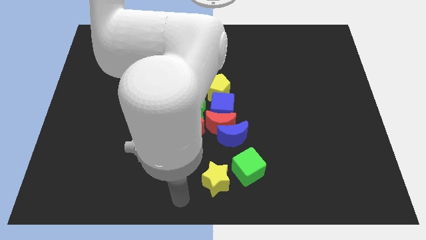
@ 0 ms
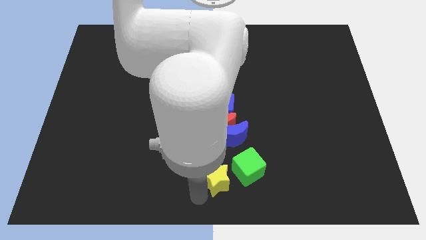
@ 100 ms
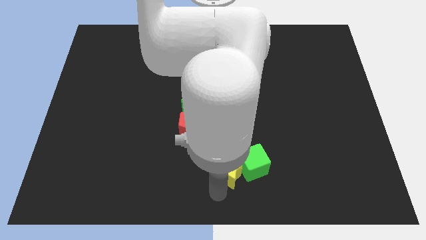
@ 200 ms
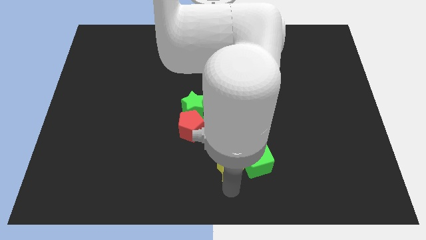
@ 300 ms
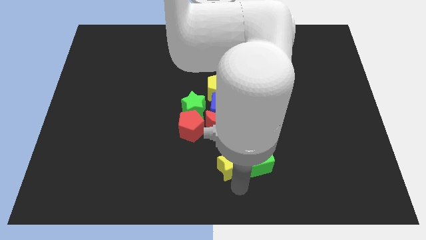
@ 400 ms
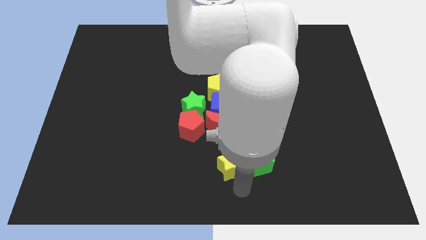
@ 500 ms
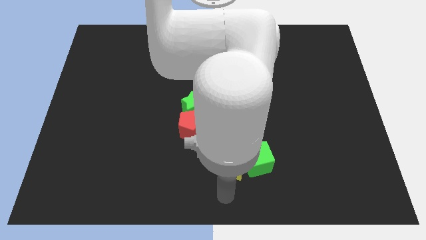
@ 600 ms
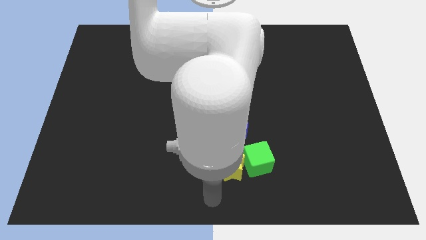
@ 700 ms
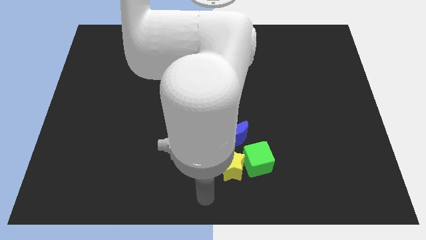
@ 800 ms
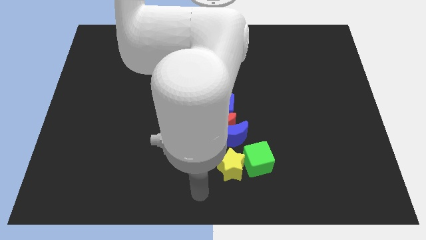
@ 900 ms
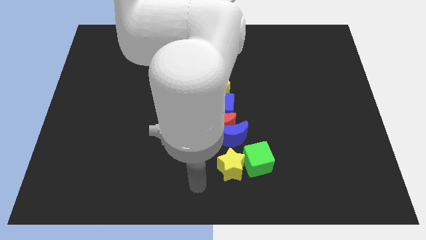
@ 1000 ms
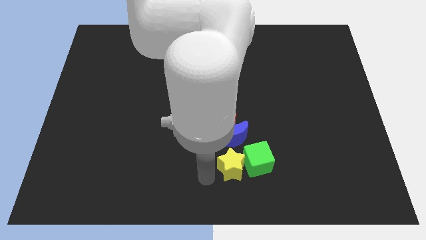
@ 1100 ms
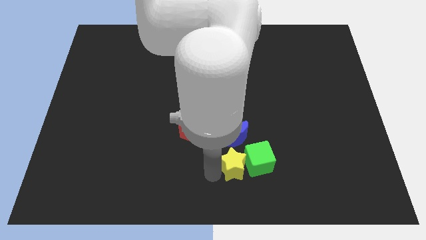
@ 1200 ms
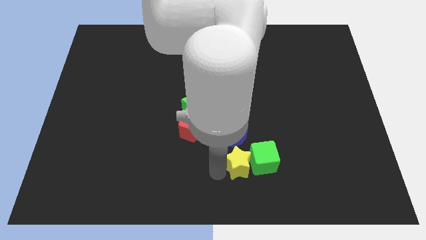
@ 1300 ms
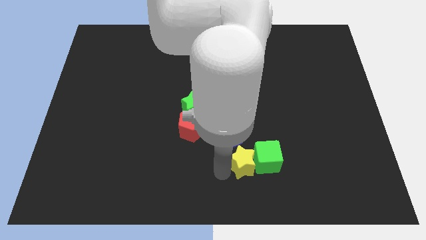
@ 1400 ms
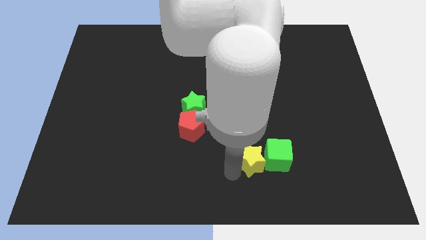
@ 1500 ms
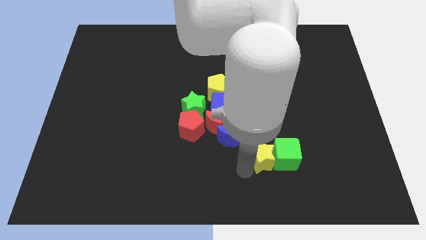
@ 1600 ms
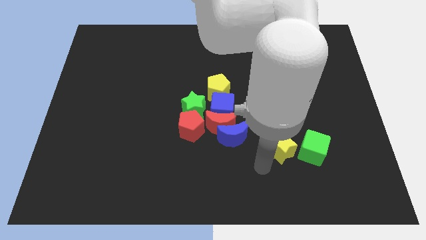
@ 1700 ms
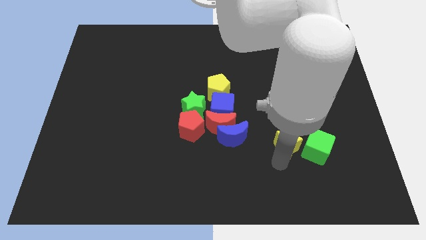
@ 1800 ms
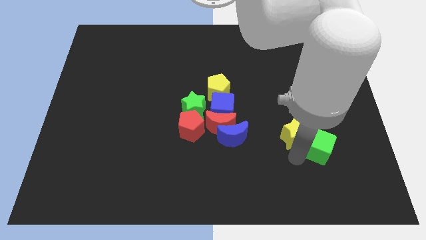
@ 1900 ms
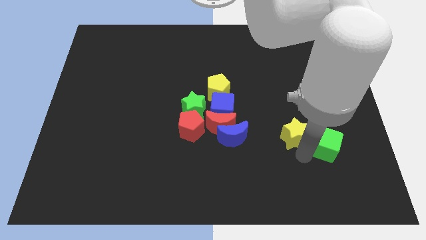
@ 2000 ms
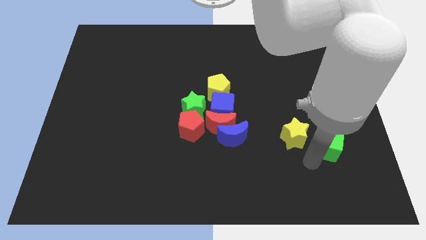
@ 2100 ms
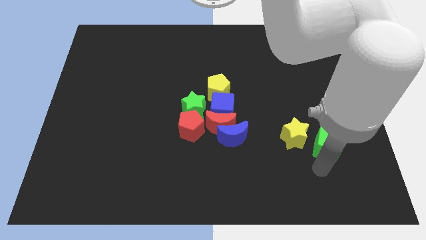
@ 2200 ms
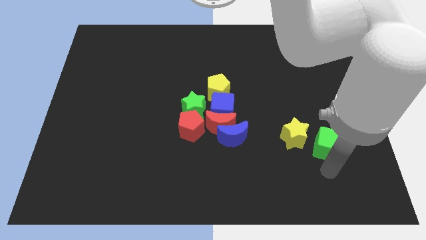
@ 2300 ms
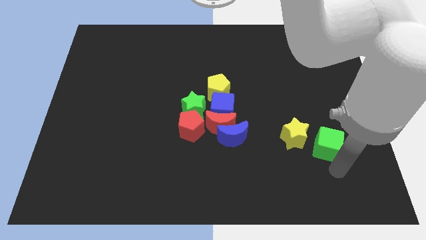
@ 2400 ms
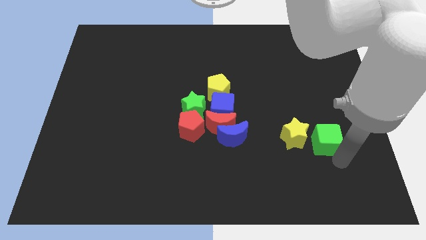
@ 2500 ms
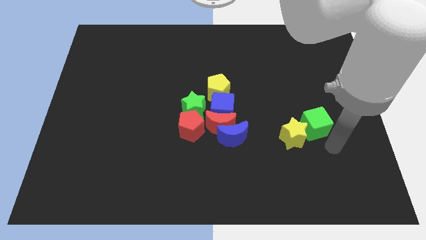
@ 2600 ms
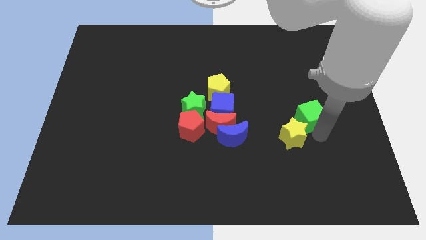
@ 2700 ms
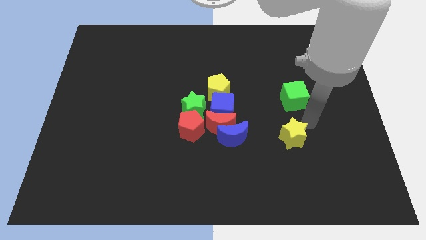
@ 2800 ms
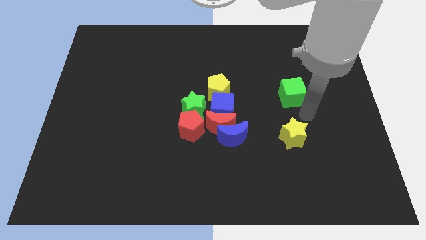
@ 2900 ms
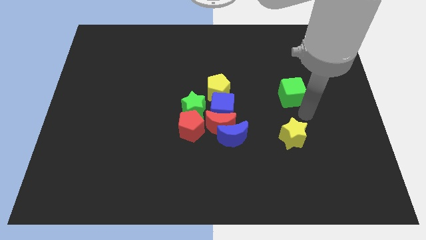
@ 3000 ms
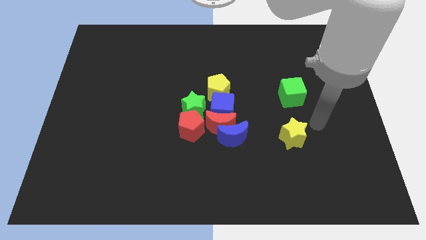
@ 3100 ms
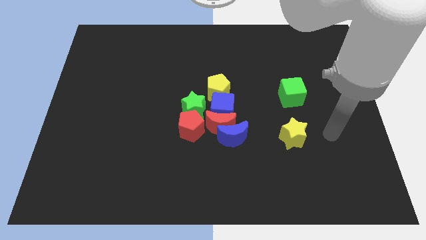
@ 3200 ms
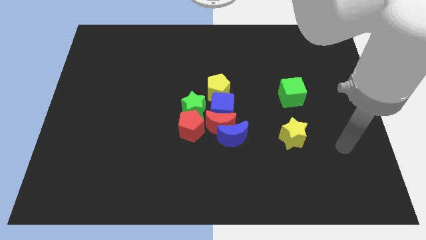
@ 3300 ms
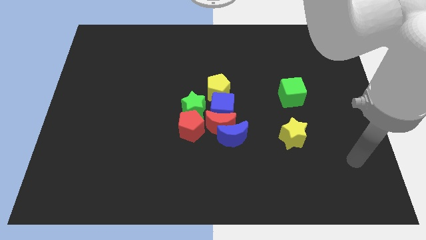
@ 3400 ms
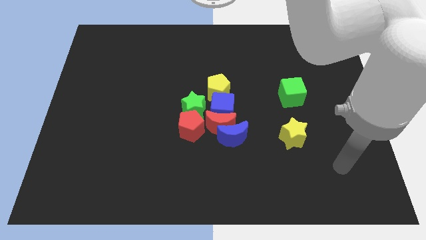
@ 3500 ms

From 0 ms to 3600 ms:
move the green cube to the top side of the yellow star

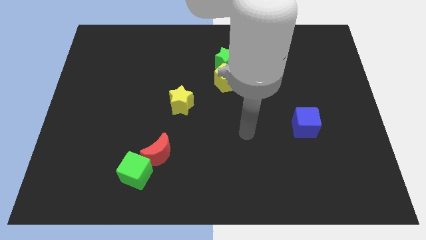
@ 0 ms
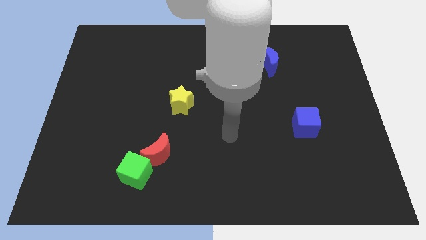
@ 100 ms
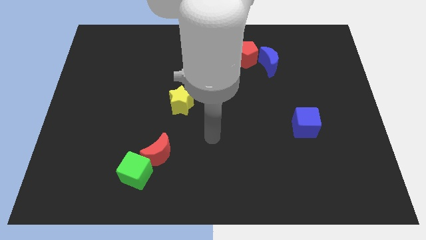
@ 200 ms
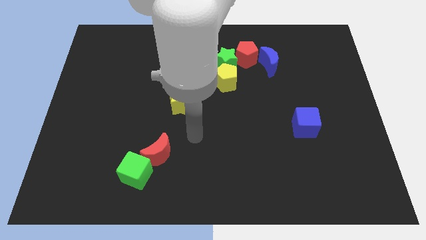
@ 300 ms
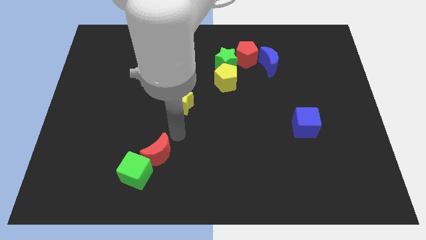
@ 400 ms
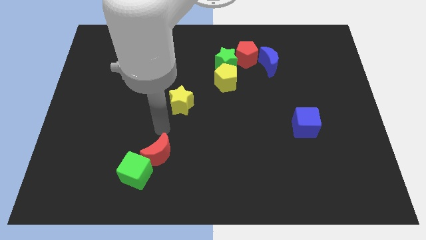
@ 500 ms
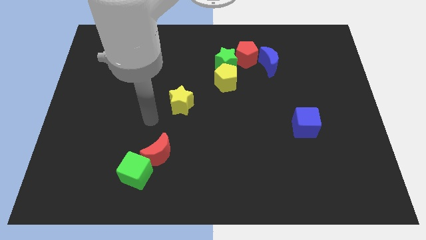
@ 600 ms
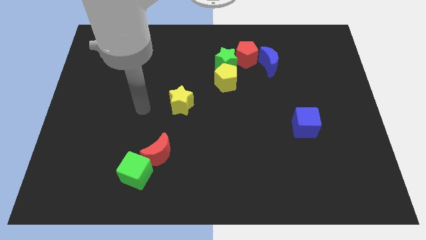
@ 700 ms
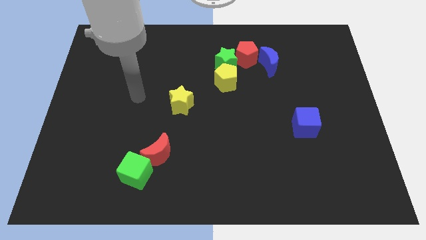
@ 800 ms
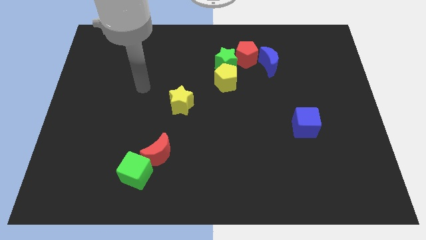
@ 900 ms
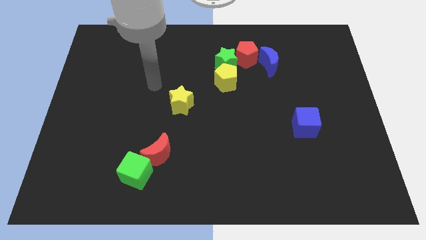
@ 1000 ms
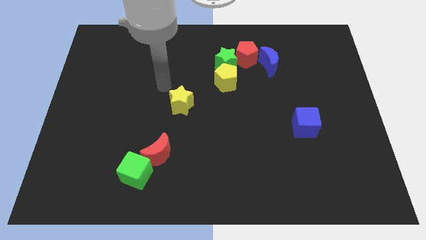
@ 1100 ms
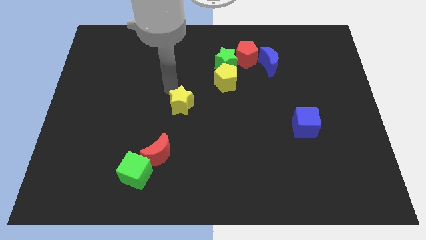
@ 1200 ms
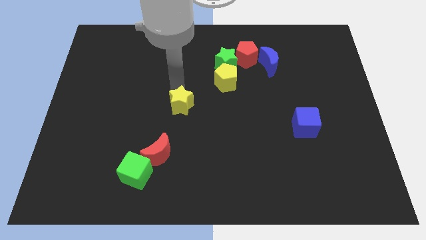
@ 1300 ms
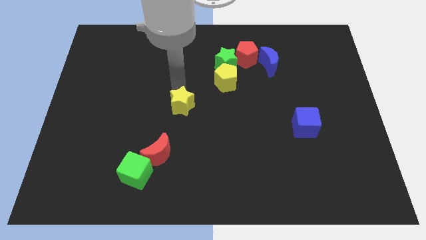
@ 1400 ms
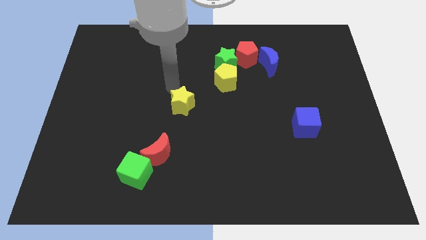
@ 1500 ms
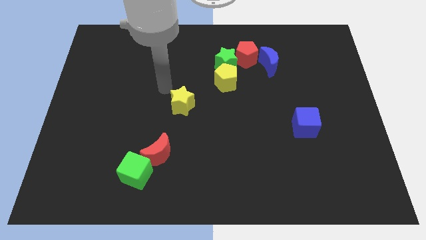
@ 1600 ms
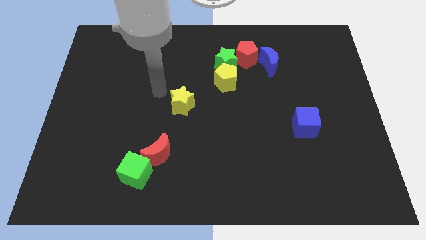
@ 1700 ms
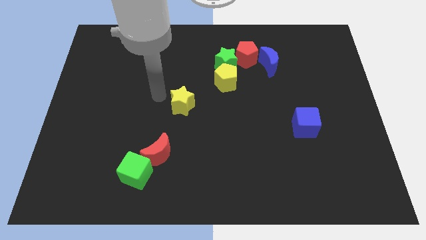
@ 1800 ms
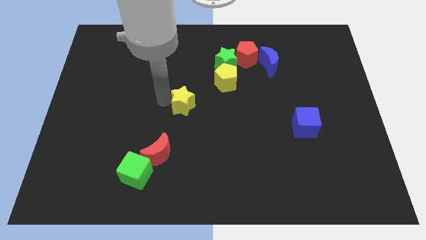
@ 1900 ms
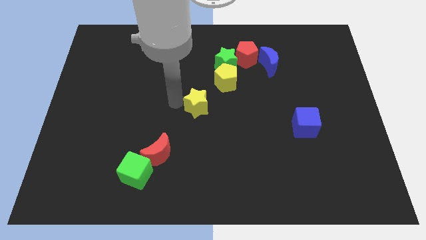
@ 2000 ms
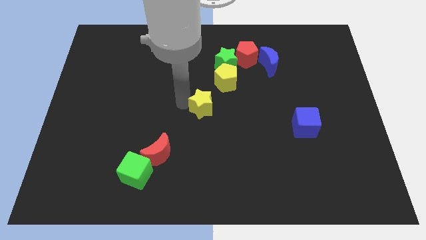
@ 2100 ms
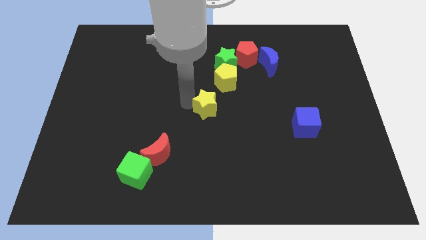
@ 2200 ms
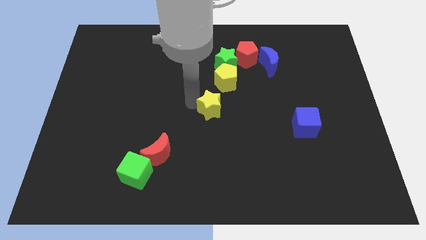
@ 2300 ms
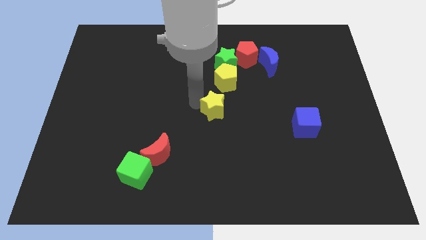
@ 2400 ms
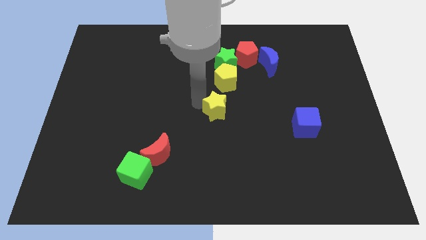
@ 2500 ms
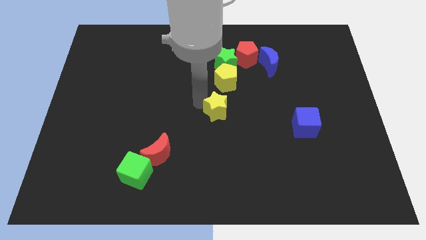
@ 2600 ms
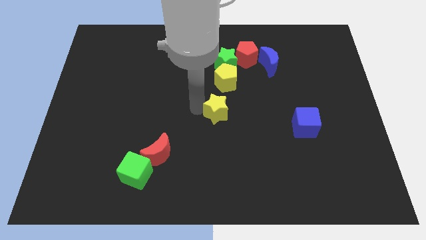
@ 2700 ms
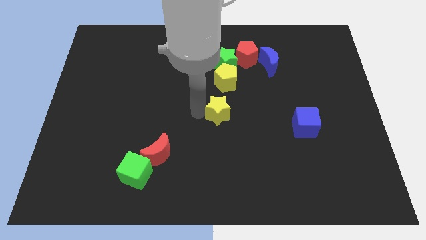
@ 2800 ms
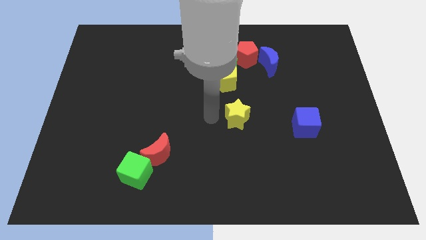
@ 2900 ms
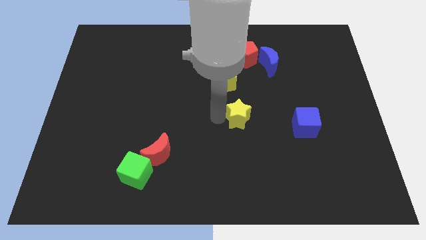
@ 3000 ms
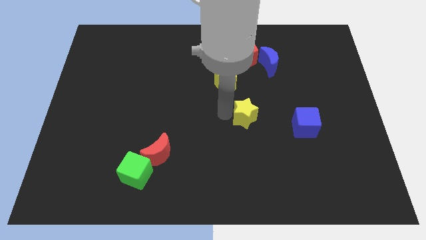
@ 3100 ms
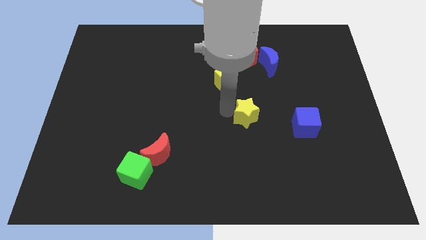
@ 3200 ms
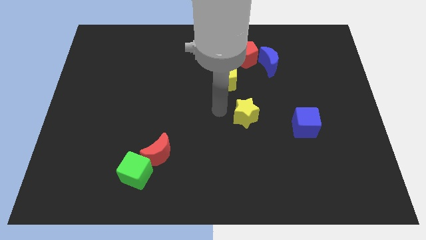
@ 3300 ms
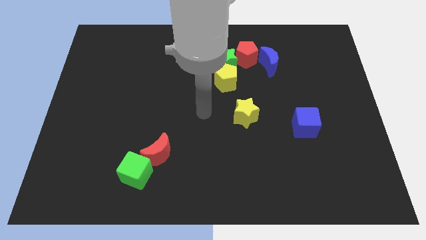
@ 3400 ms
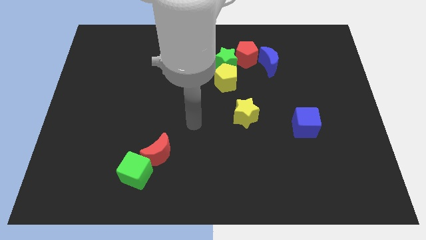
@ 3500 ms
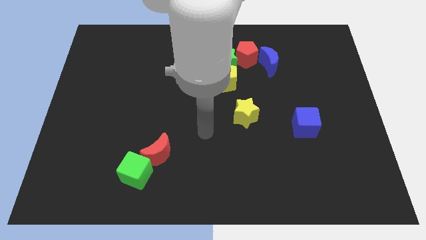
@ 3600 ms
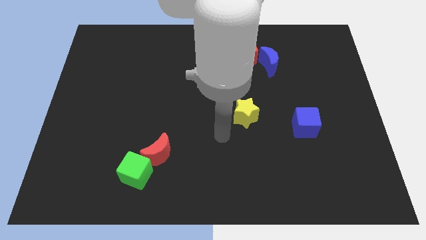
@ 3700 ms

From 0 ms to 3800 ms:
move the yellow star vertically below the red pentagon

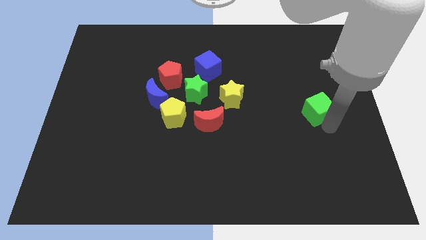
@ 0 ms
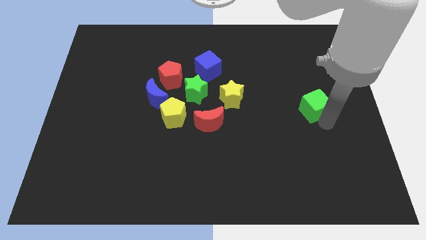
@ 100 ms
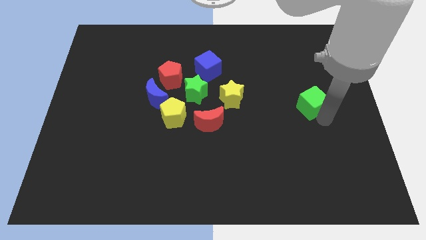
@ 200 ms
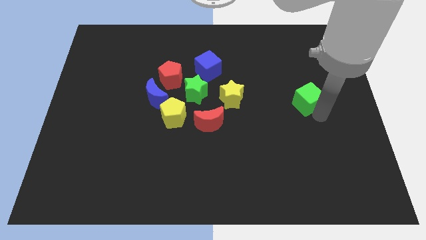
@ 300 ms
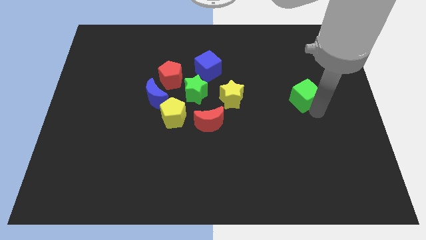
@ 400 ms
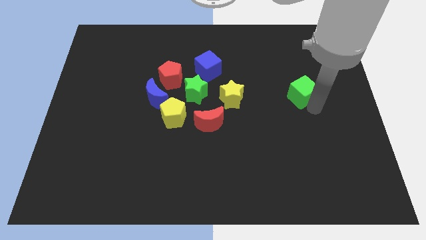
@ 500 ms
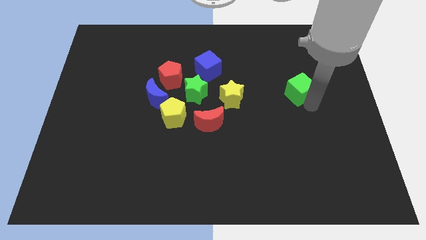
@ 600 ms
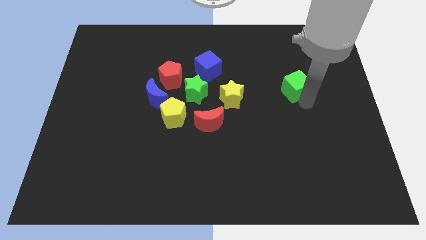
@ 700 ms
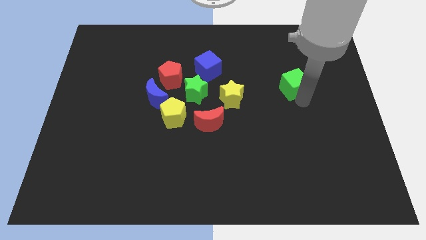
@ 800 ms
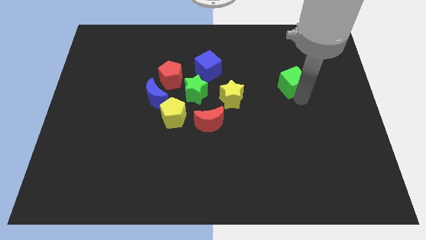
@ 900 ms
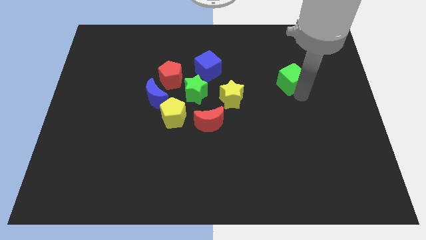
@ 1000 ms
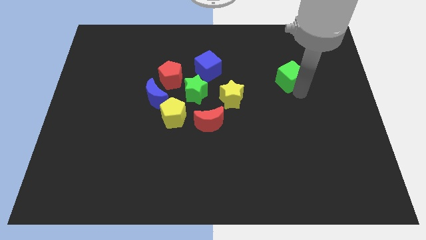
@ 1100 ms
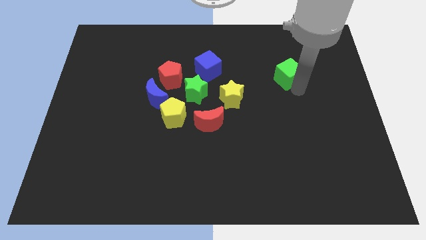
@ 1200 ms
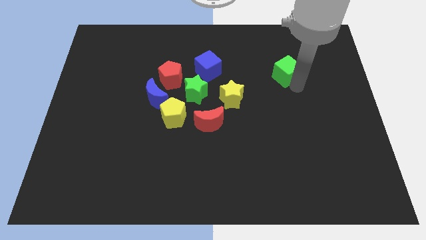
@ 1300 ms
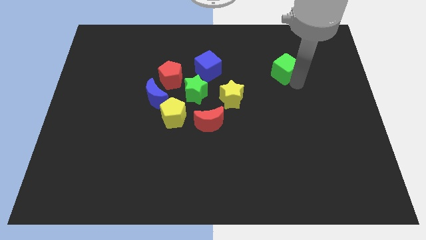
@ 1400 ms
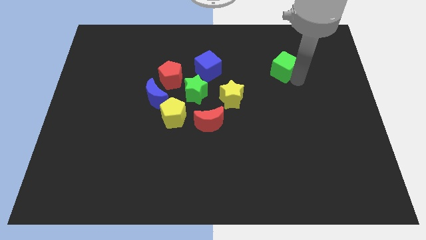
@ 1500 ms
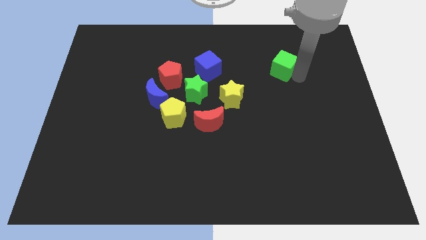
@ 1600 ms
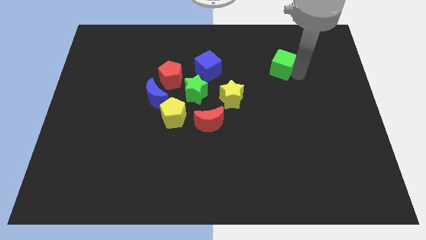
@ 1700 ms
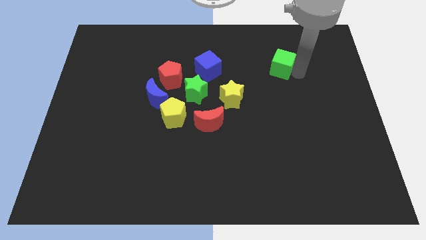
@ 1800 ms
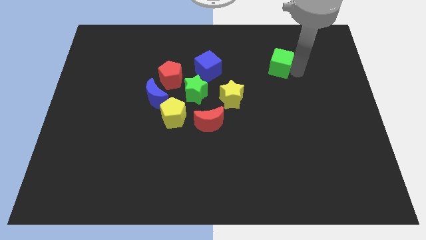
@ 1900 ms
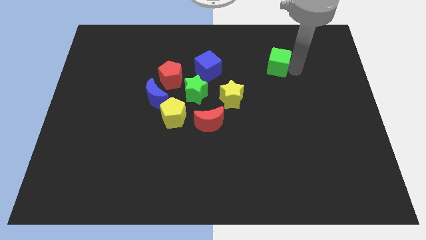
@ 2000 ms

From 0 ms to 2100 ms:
move the green cube vertical towards the top right to the yellow star
